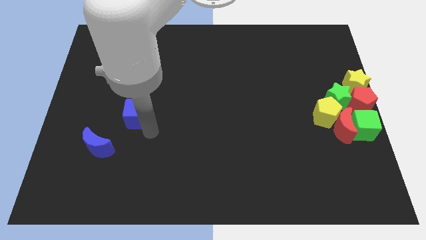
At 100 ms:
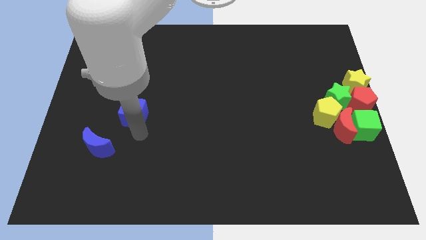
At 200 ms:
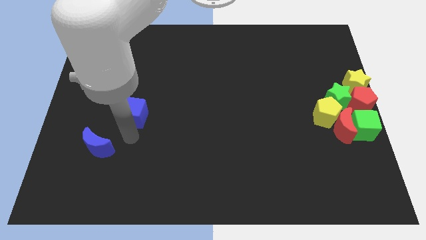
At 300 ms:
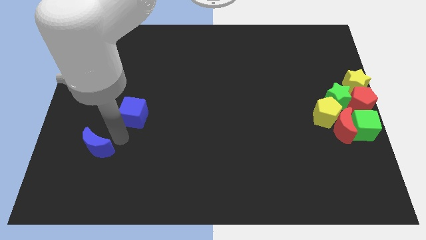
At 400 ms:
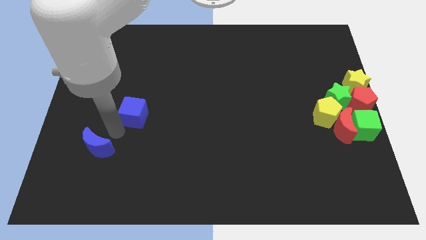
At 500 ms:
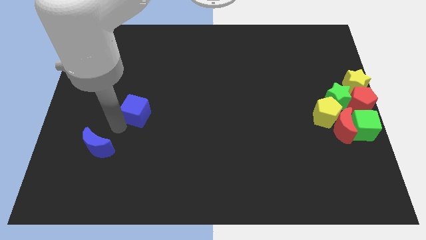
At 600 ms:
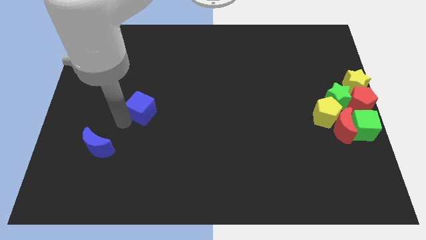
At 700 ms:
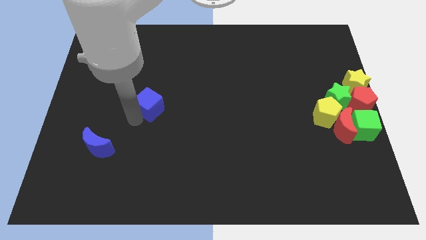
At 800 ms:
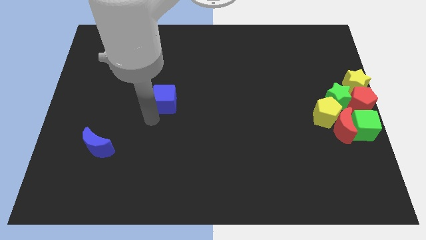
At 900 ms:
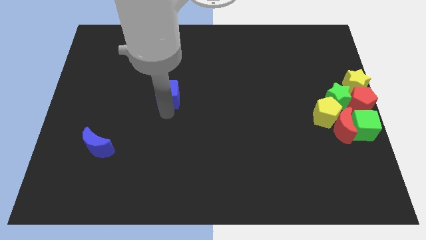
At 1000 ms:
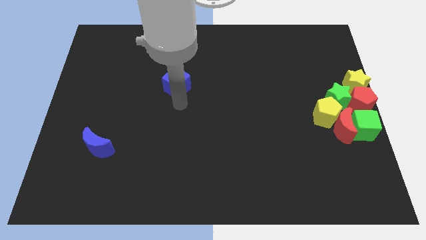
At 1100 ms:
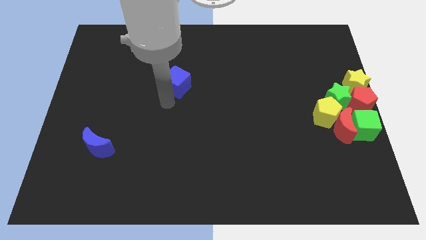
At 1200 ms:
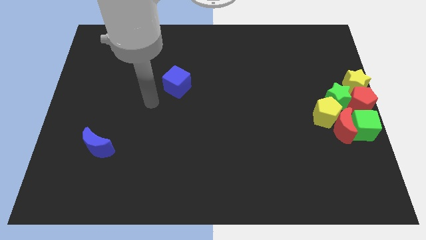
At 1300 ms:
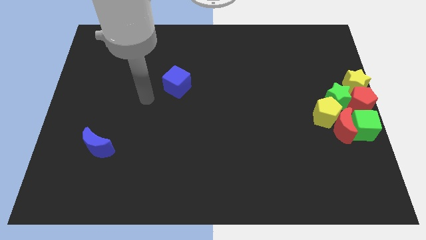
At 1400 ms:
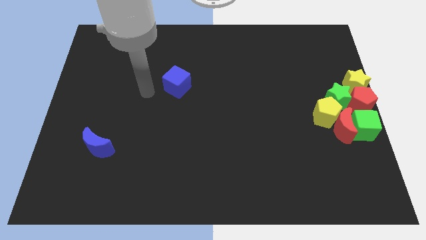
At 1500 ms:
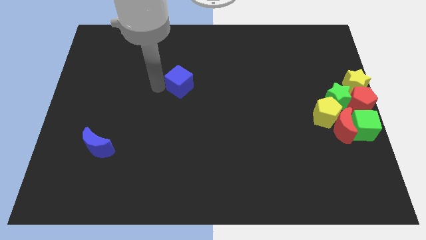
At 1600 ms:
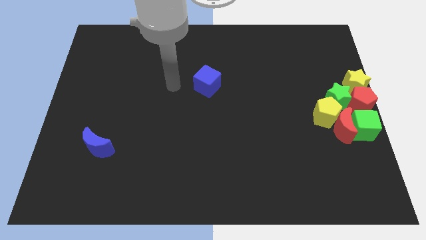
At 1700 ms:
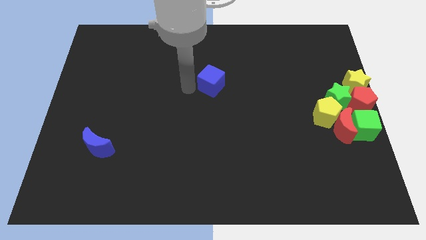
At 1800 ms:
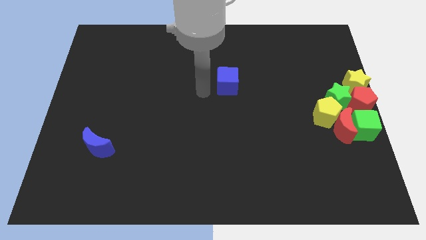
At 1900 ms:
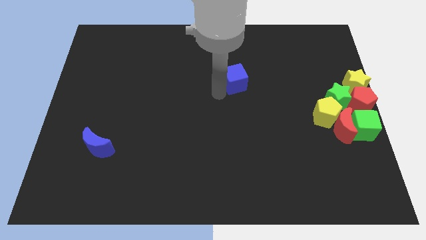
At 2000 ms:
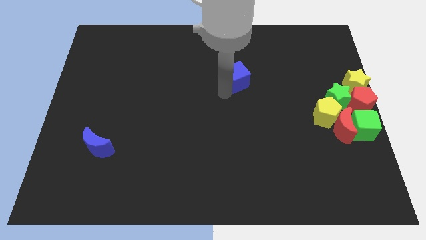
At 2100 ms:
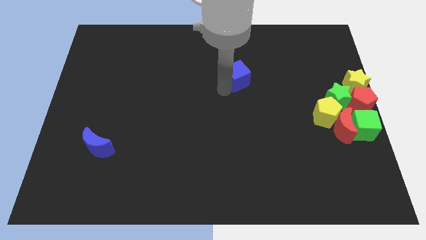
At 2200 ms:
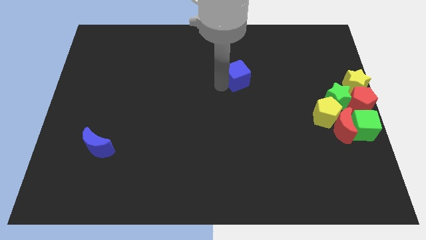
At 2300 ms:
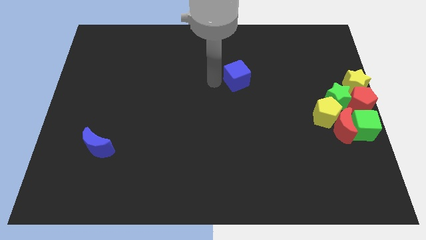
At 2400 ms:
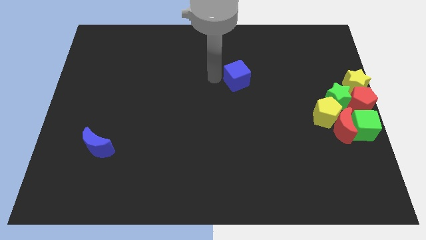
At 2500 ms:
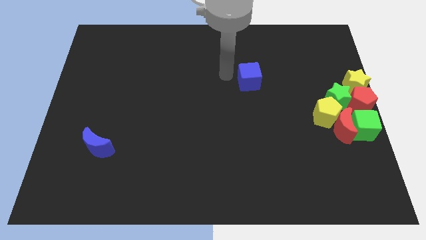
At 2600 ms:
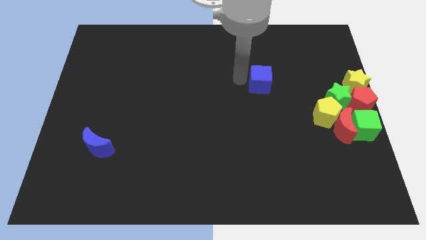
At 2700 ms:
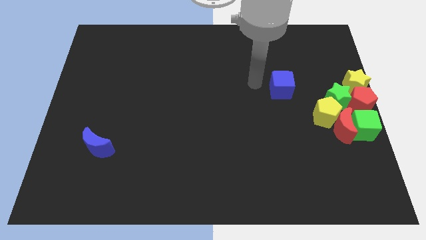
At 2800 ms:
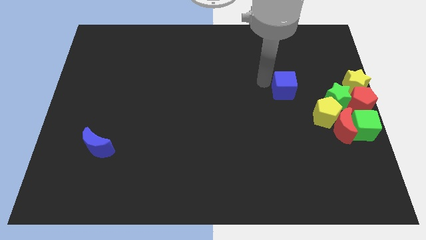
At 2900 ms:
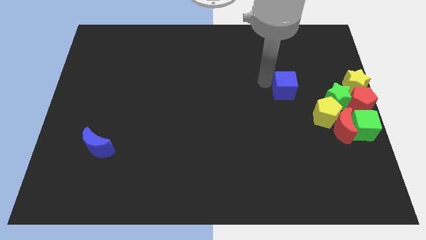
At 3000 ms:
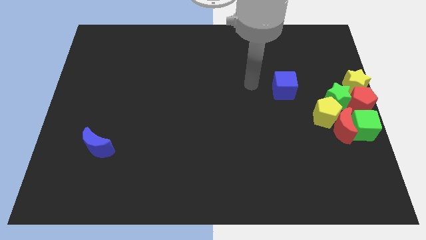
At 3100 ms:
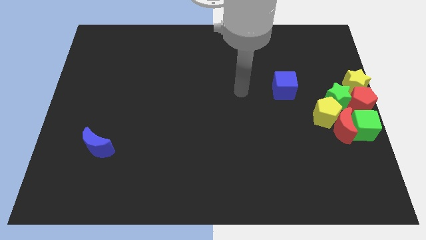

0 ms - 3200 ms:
push the blue cube towards the top right side of the board

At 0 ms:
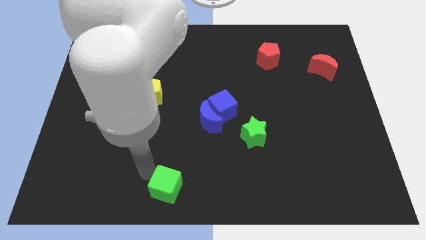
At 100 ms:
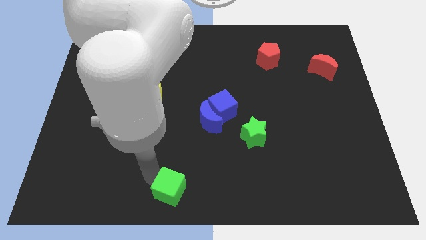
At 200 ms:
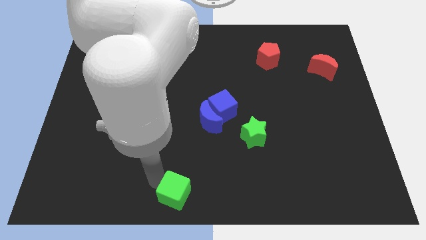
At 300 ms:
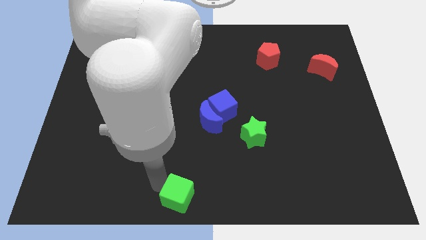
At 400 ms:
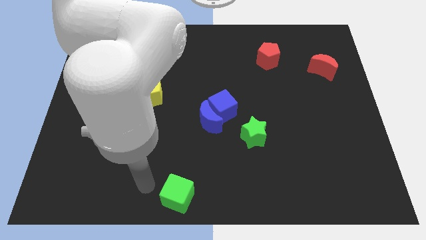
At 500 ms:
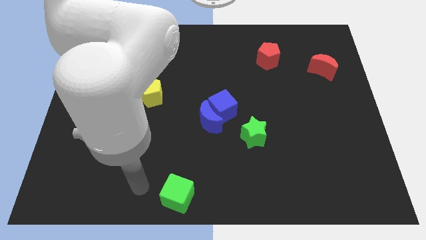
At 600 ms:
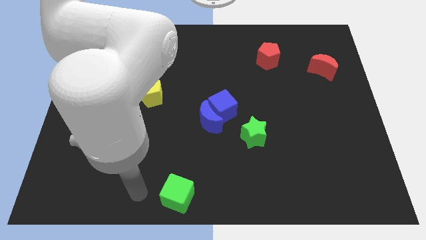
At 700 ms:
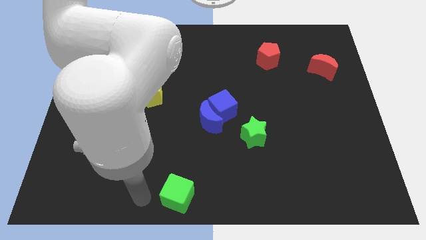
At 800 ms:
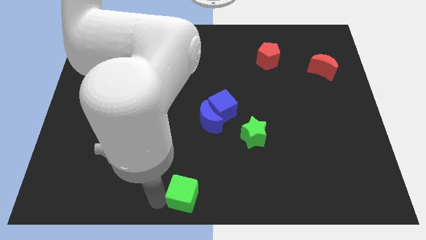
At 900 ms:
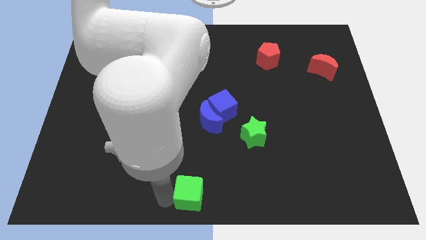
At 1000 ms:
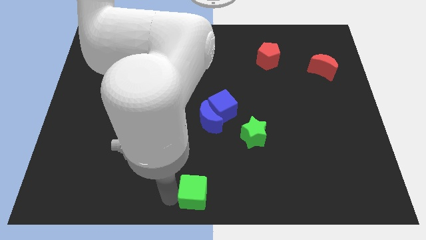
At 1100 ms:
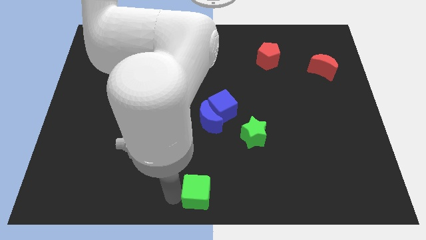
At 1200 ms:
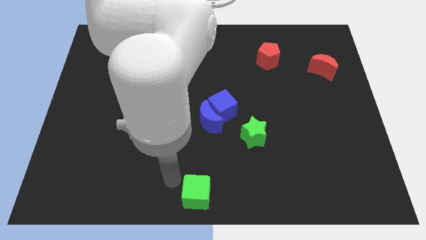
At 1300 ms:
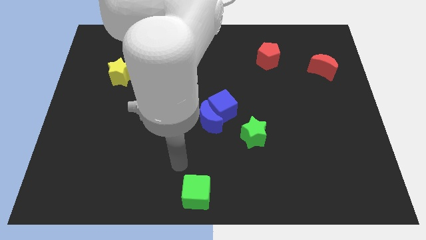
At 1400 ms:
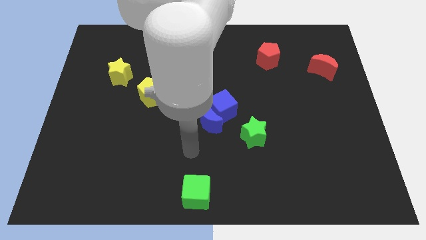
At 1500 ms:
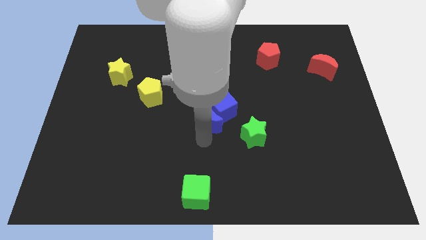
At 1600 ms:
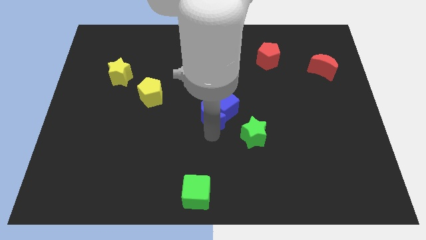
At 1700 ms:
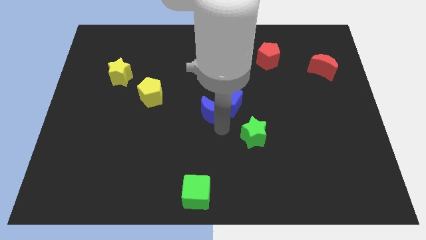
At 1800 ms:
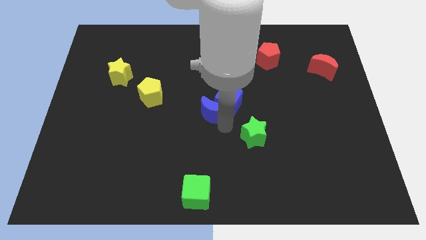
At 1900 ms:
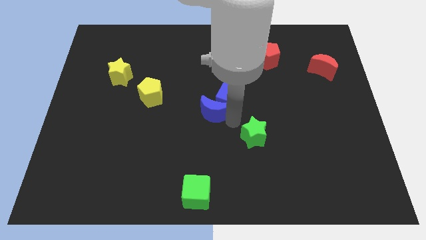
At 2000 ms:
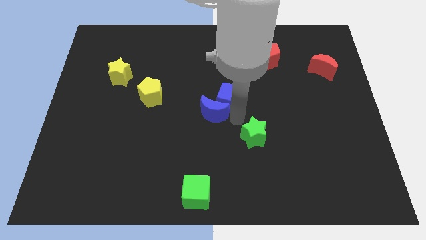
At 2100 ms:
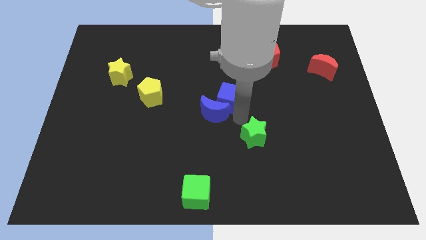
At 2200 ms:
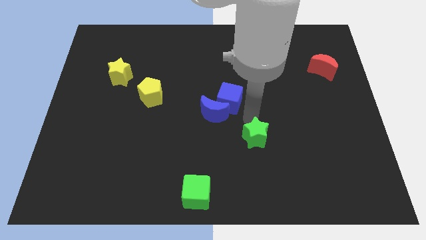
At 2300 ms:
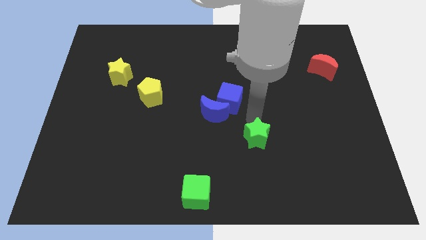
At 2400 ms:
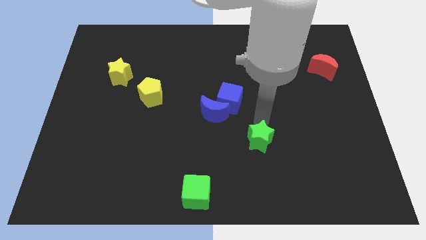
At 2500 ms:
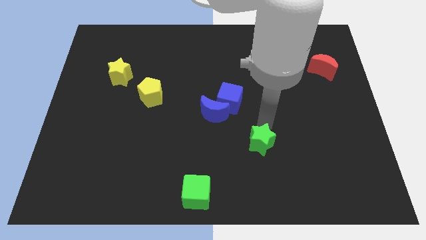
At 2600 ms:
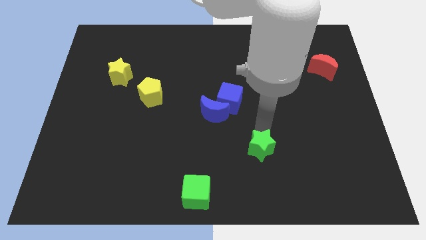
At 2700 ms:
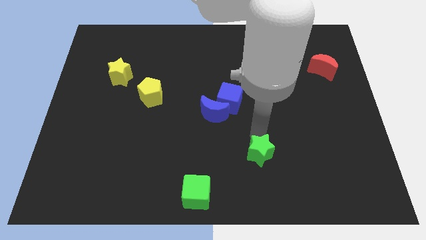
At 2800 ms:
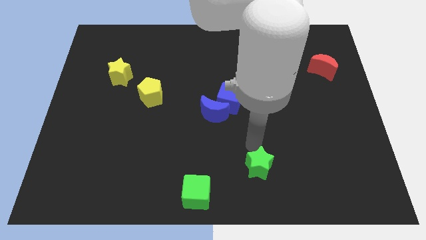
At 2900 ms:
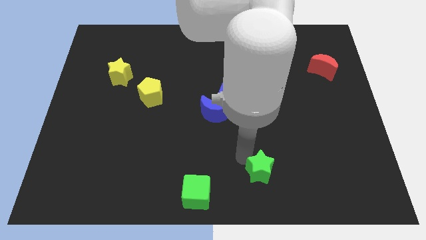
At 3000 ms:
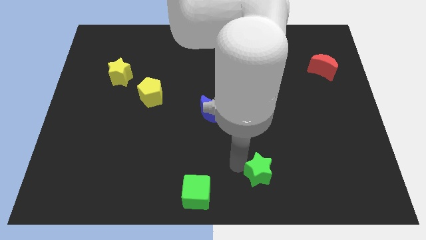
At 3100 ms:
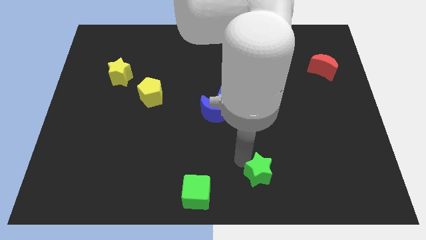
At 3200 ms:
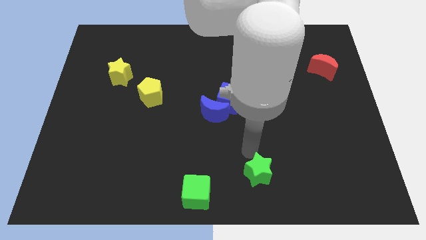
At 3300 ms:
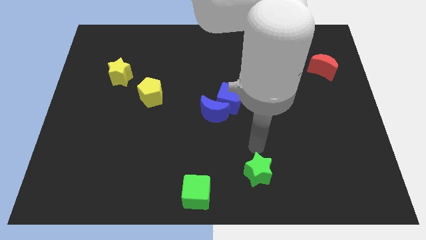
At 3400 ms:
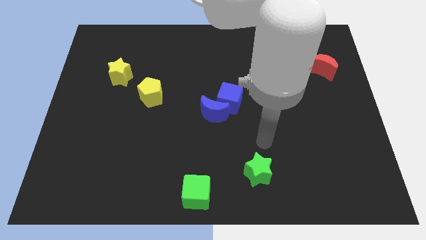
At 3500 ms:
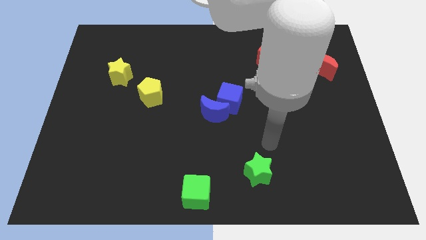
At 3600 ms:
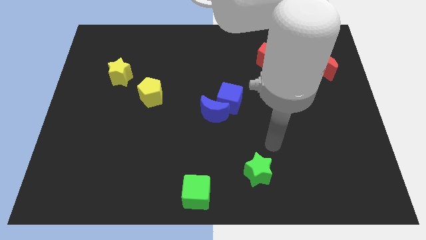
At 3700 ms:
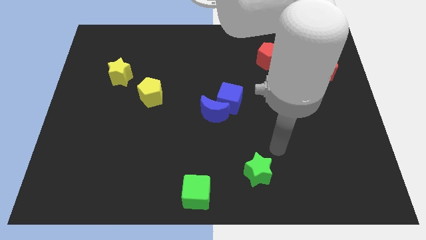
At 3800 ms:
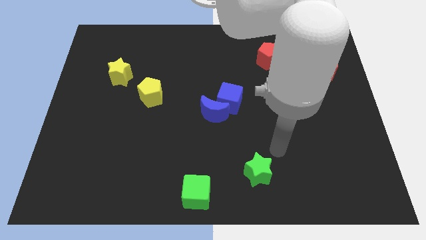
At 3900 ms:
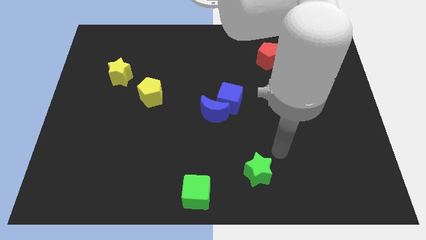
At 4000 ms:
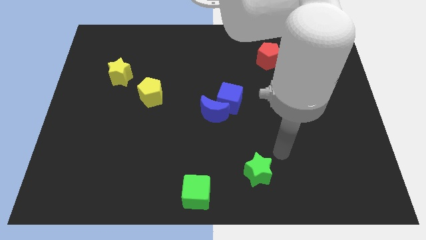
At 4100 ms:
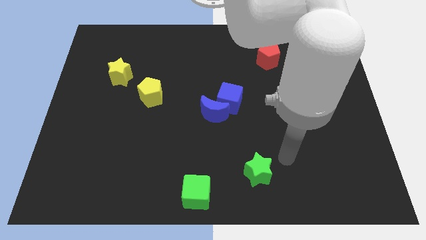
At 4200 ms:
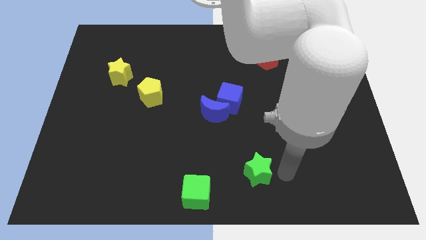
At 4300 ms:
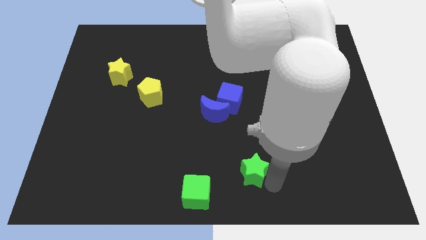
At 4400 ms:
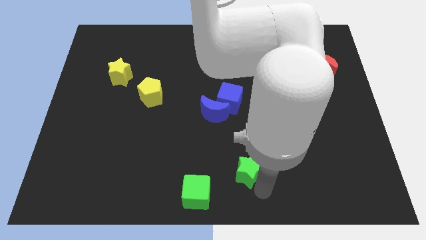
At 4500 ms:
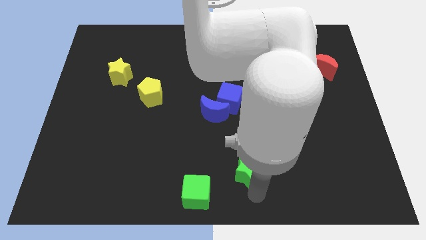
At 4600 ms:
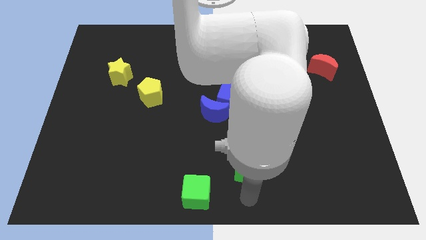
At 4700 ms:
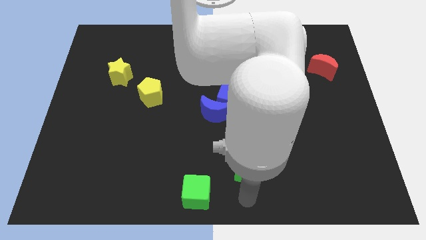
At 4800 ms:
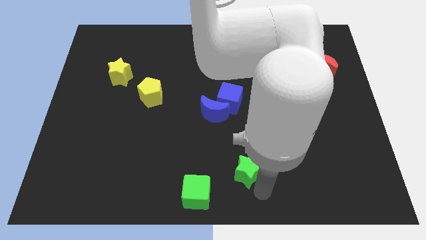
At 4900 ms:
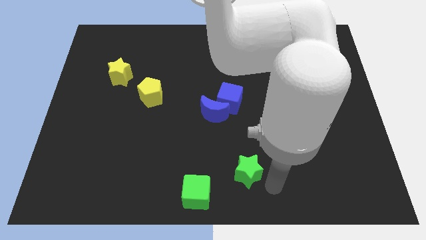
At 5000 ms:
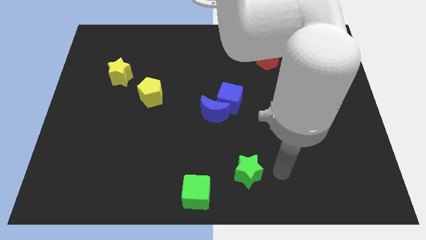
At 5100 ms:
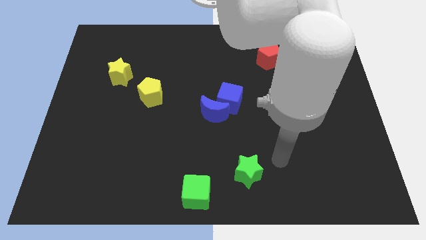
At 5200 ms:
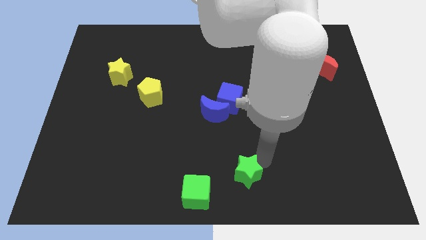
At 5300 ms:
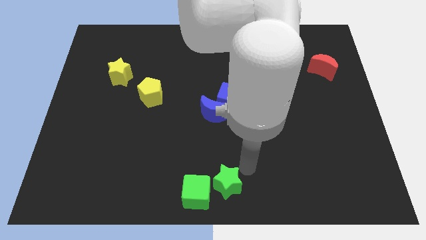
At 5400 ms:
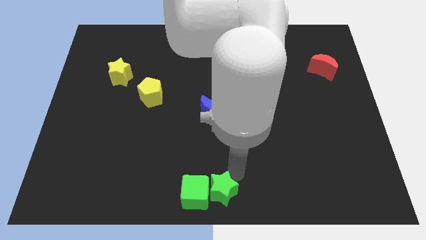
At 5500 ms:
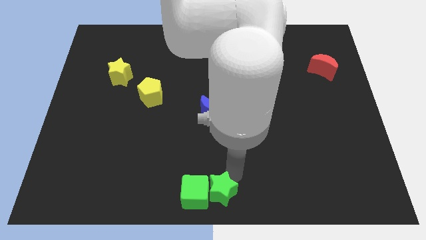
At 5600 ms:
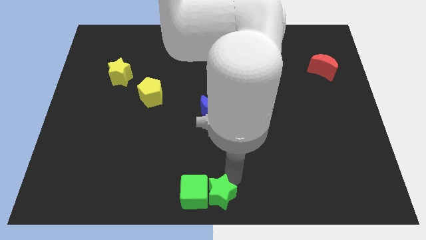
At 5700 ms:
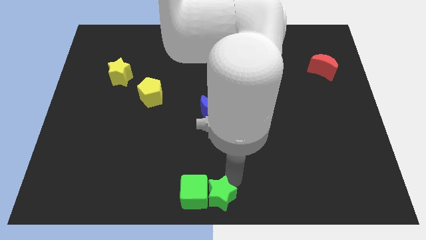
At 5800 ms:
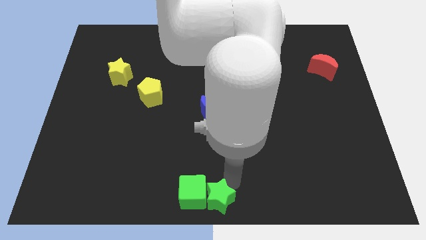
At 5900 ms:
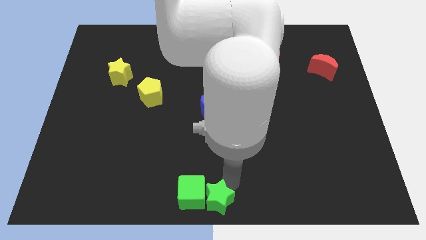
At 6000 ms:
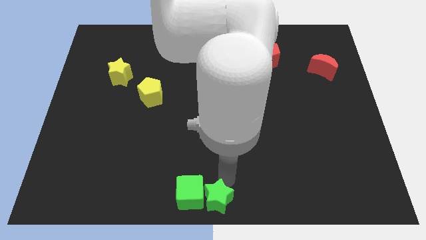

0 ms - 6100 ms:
place the green star at the right side of the green cube
